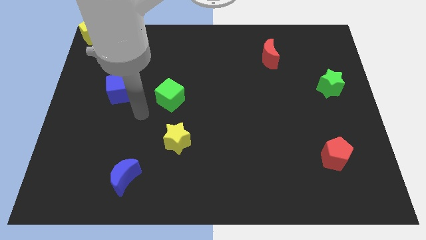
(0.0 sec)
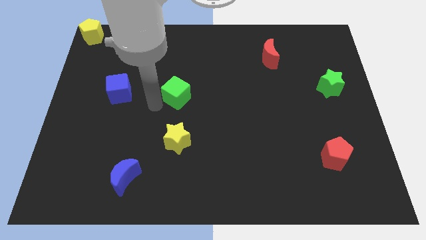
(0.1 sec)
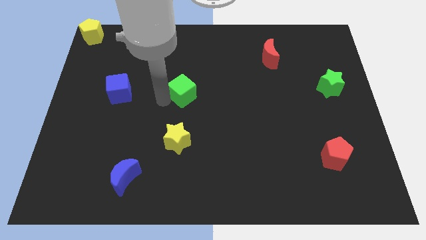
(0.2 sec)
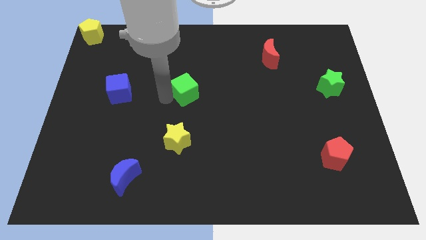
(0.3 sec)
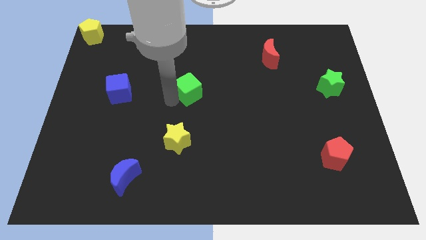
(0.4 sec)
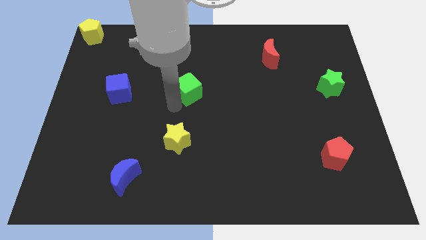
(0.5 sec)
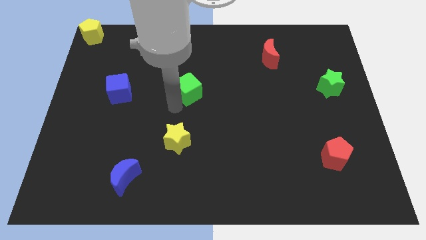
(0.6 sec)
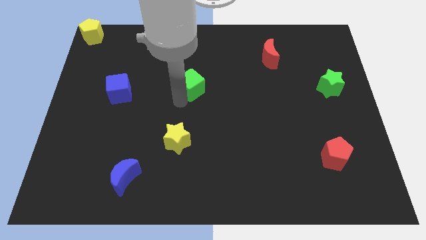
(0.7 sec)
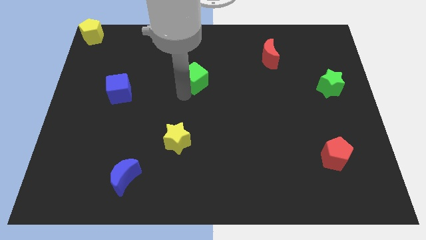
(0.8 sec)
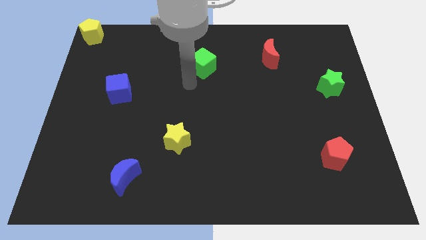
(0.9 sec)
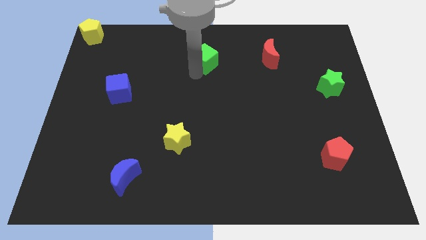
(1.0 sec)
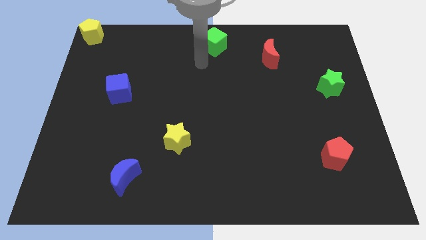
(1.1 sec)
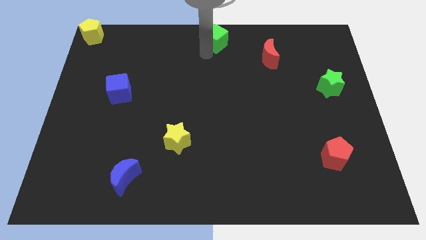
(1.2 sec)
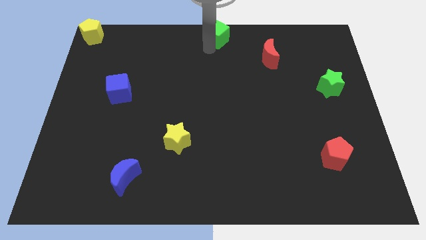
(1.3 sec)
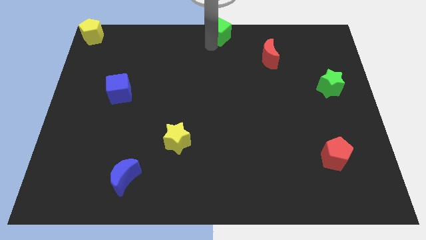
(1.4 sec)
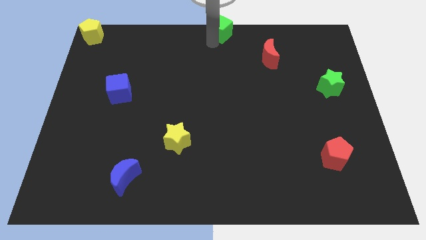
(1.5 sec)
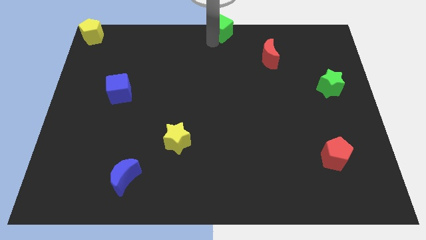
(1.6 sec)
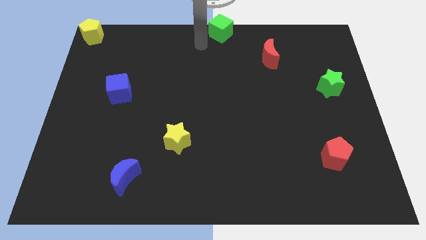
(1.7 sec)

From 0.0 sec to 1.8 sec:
place green cube towards top middle end of the board

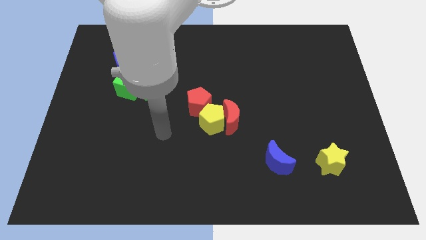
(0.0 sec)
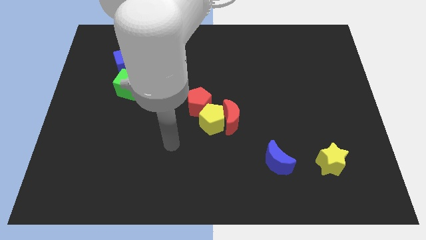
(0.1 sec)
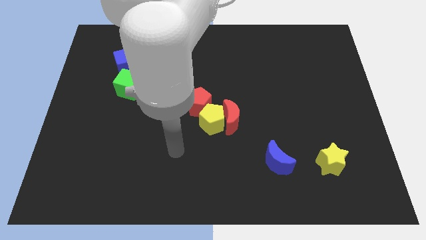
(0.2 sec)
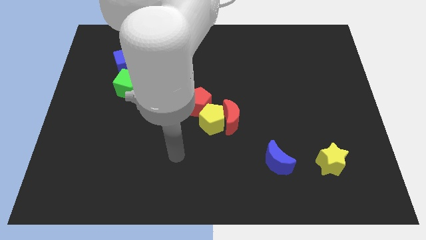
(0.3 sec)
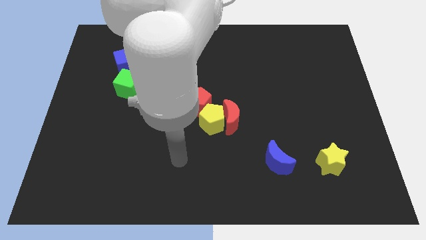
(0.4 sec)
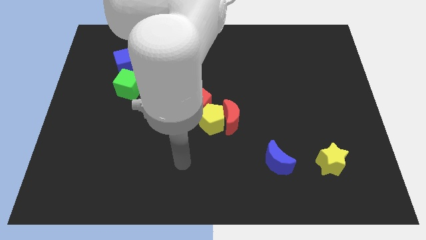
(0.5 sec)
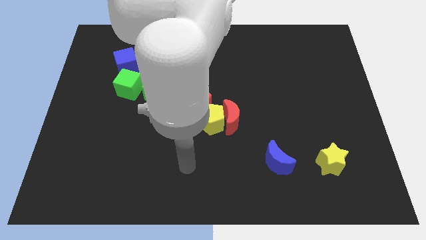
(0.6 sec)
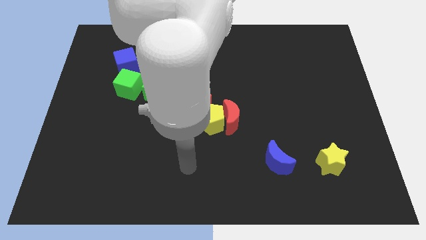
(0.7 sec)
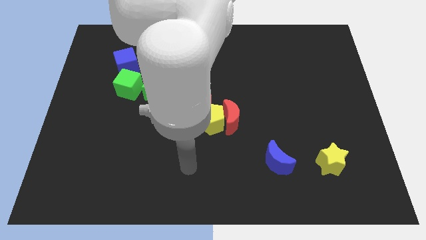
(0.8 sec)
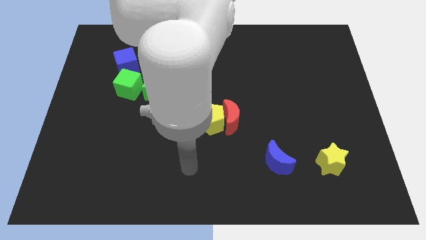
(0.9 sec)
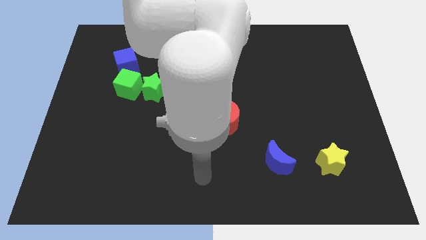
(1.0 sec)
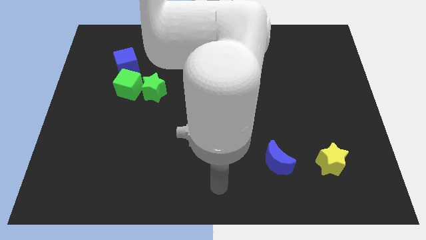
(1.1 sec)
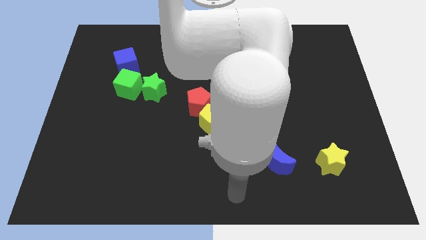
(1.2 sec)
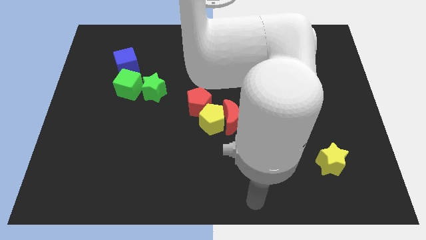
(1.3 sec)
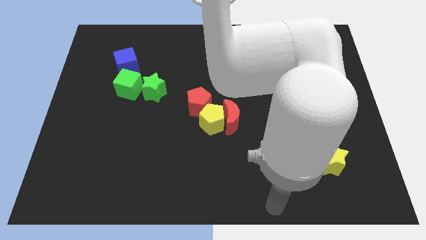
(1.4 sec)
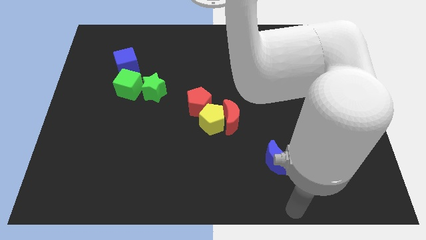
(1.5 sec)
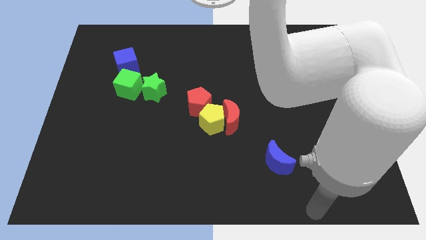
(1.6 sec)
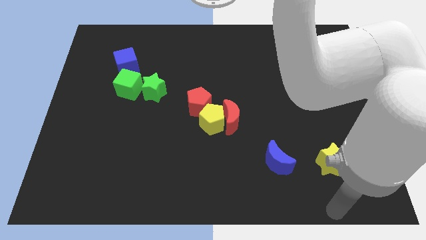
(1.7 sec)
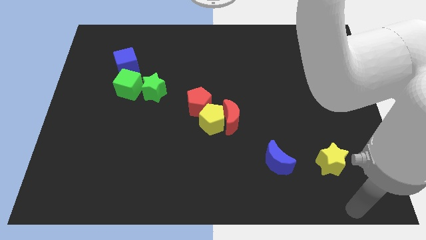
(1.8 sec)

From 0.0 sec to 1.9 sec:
move your hand towards the bottom right

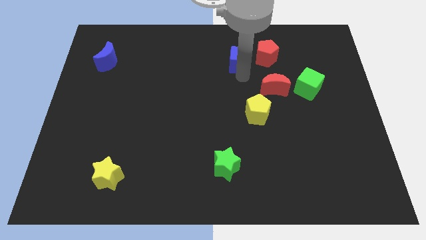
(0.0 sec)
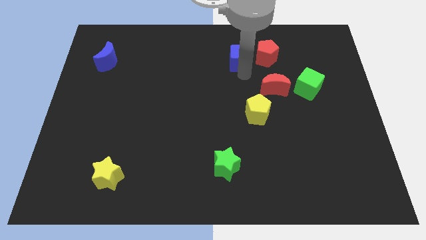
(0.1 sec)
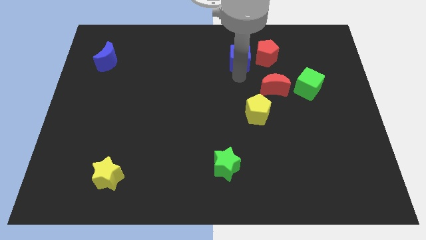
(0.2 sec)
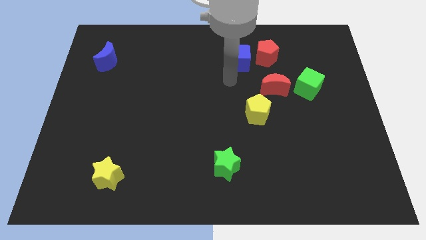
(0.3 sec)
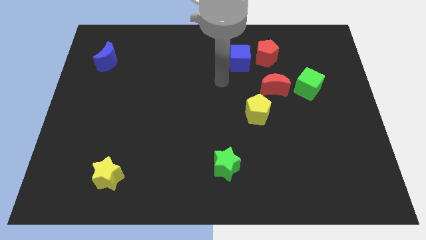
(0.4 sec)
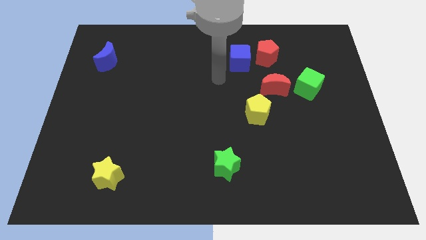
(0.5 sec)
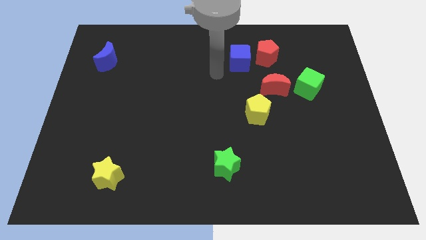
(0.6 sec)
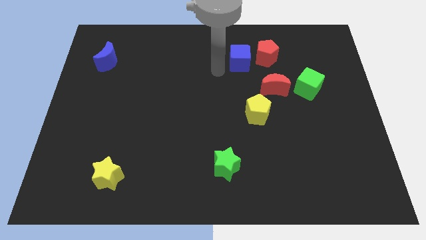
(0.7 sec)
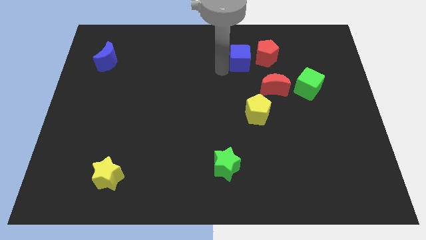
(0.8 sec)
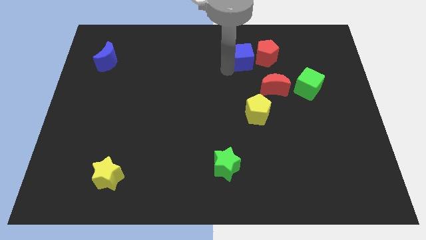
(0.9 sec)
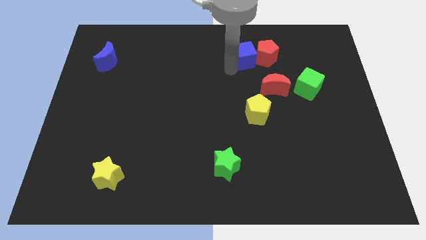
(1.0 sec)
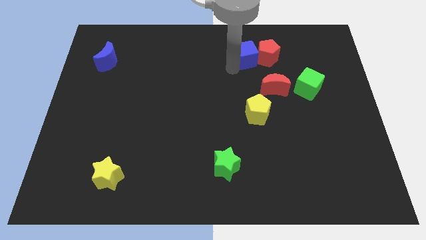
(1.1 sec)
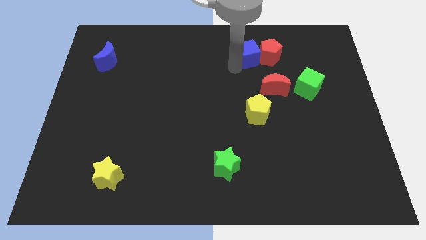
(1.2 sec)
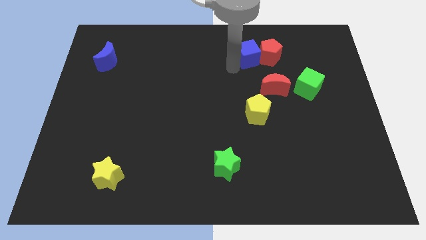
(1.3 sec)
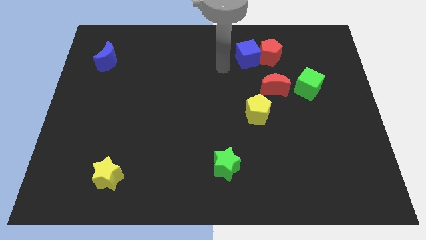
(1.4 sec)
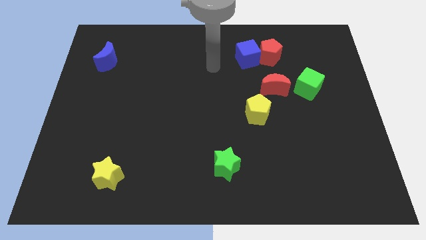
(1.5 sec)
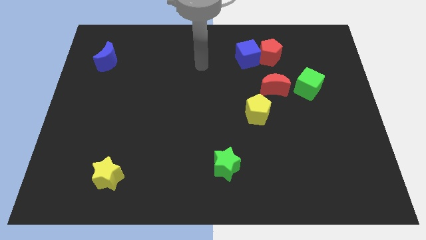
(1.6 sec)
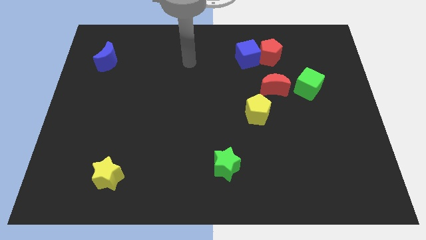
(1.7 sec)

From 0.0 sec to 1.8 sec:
push the blue cube into red pentagon

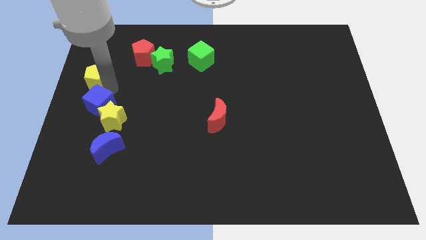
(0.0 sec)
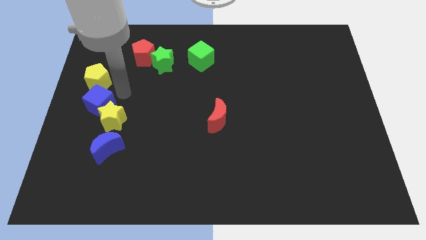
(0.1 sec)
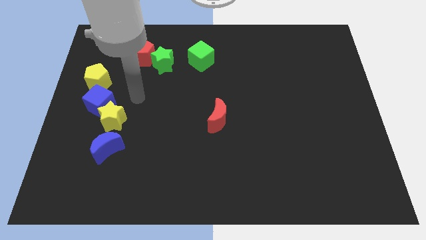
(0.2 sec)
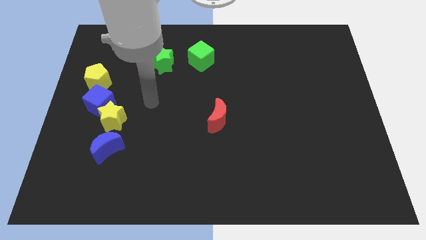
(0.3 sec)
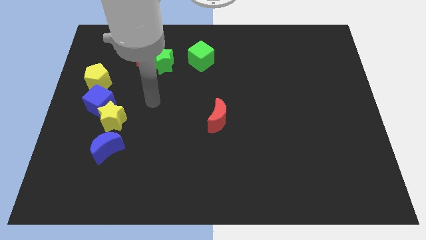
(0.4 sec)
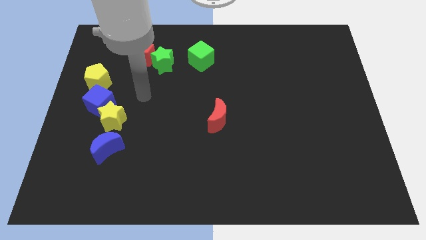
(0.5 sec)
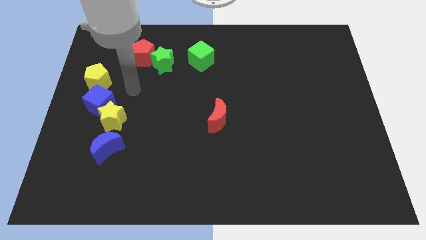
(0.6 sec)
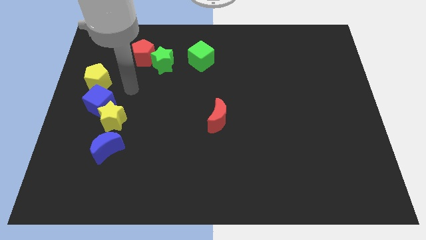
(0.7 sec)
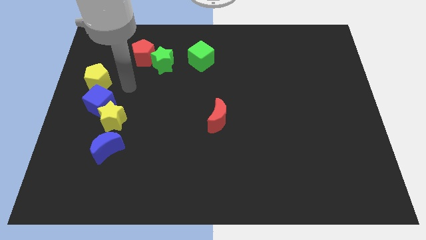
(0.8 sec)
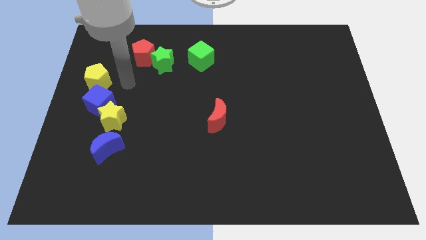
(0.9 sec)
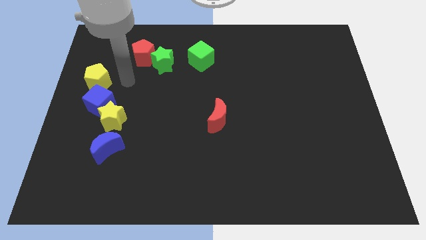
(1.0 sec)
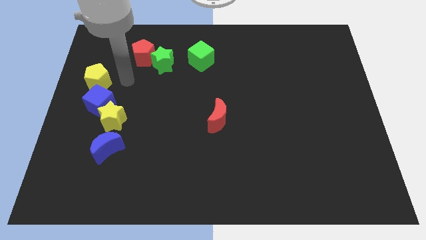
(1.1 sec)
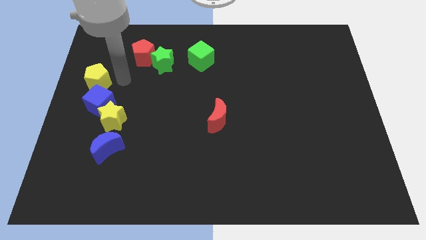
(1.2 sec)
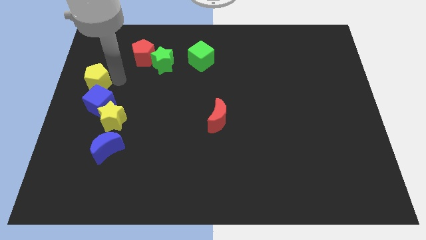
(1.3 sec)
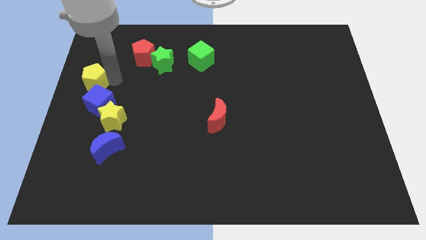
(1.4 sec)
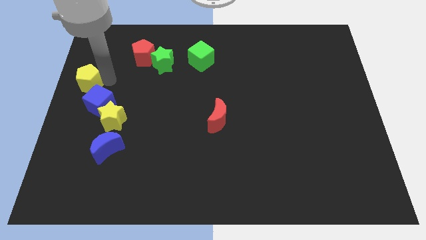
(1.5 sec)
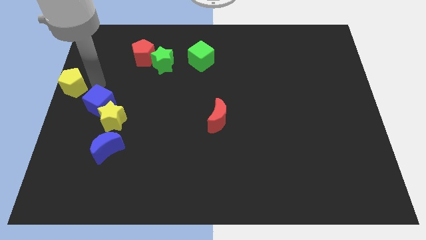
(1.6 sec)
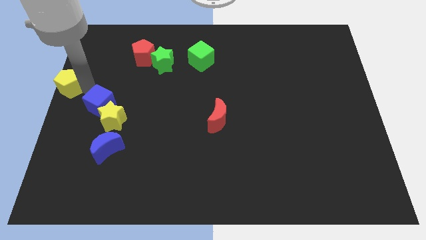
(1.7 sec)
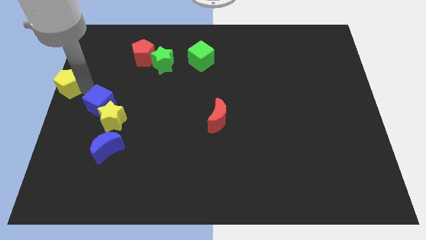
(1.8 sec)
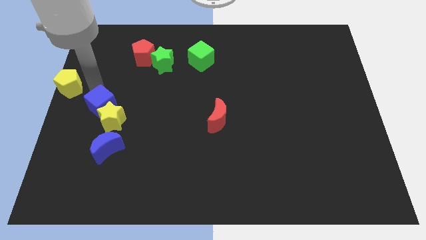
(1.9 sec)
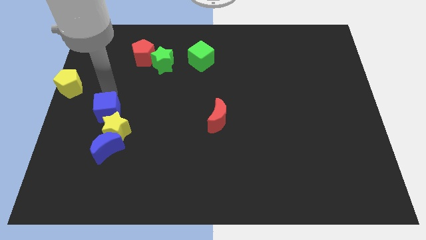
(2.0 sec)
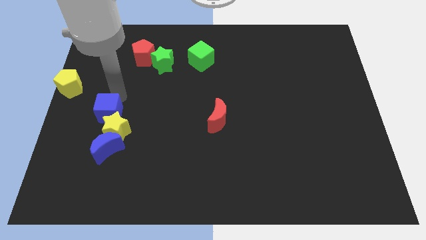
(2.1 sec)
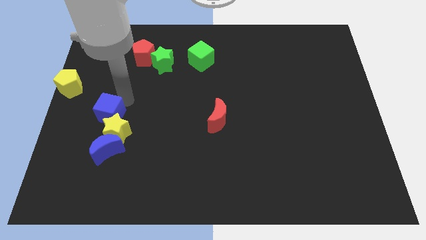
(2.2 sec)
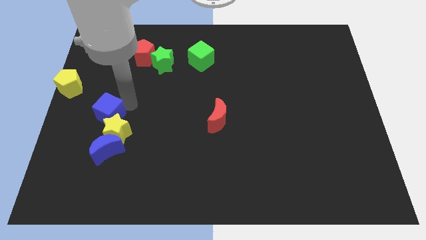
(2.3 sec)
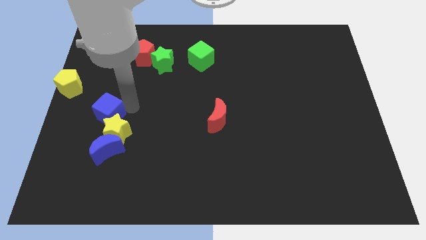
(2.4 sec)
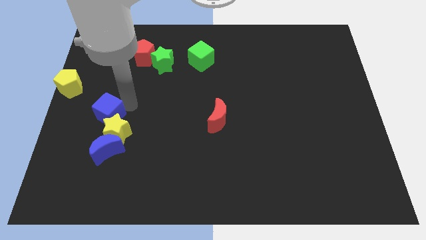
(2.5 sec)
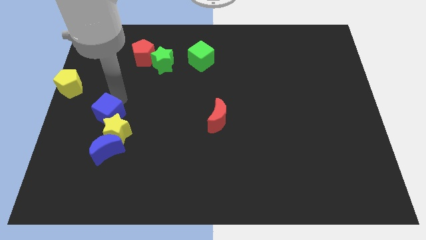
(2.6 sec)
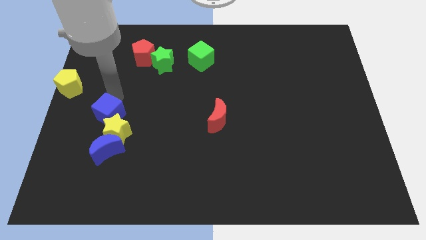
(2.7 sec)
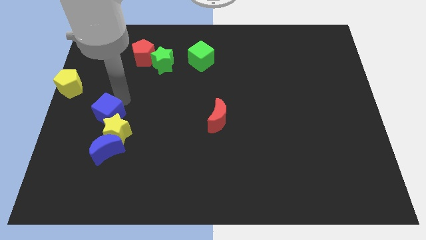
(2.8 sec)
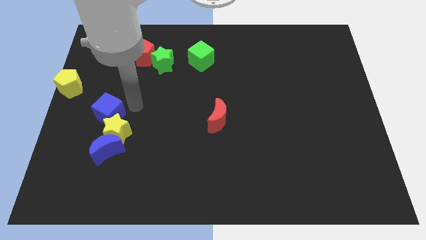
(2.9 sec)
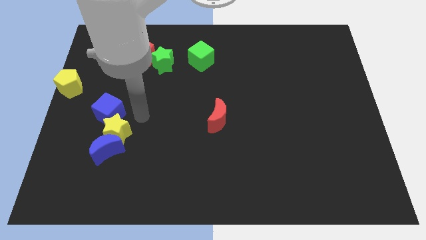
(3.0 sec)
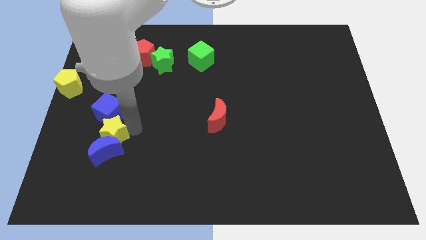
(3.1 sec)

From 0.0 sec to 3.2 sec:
push the blue cube and yellow star into the blue crescent

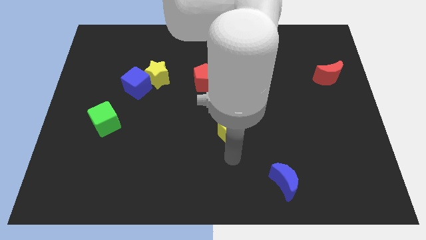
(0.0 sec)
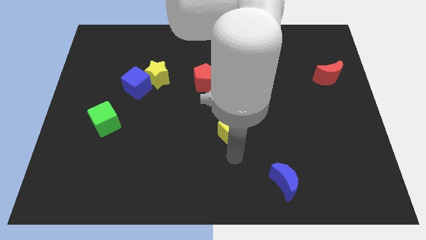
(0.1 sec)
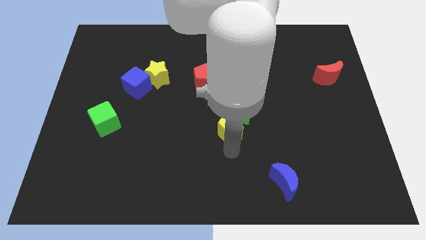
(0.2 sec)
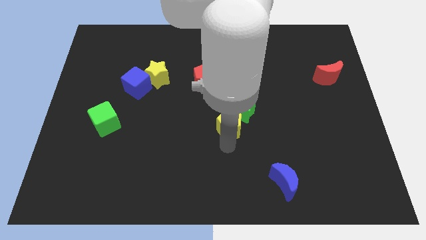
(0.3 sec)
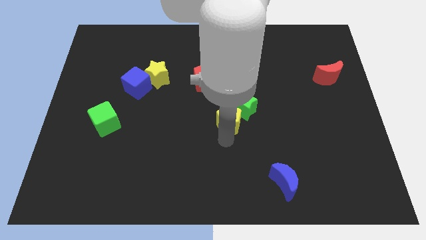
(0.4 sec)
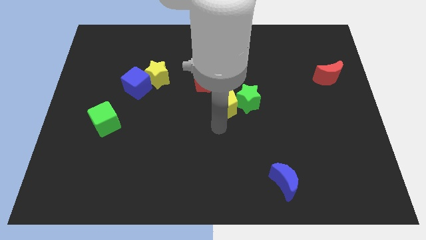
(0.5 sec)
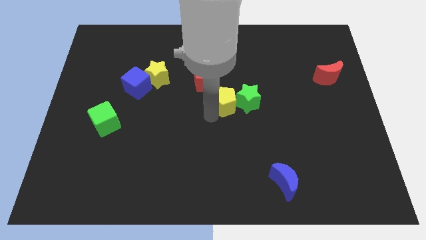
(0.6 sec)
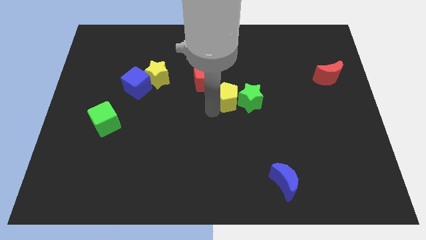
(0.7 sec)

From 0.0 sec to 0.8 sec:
push the green star and yellow pentagon towards the top side of the board
